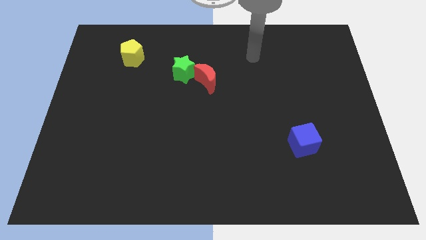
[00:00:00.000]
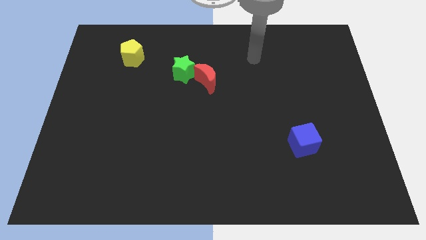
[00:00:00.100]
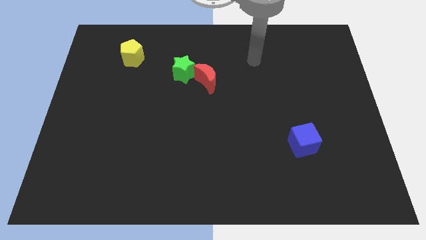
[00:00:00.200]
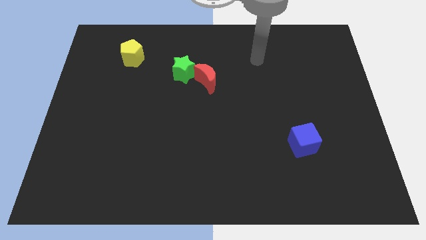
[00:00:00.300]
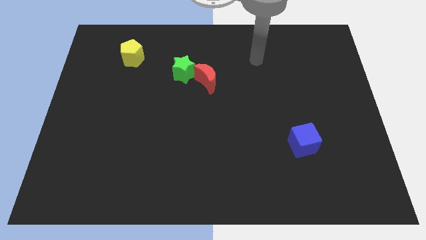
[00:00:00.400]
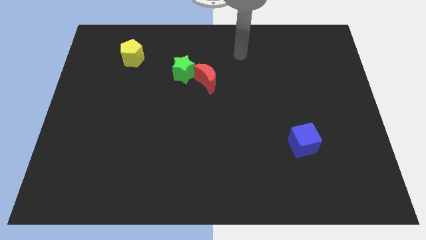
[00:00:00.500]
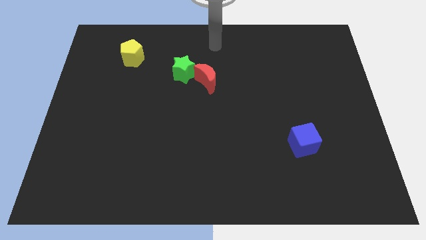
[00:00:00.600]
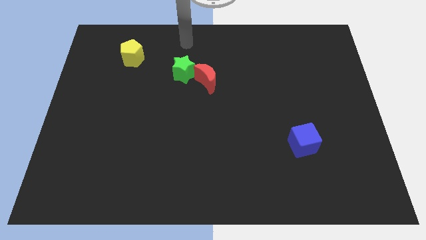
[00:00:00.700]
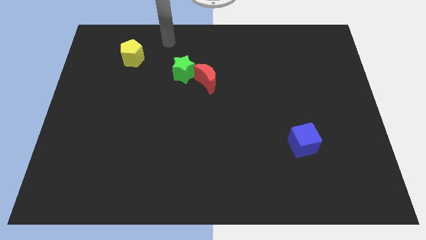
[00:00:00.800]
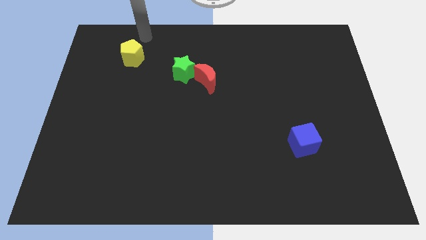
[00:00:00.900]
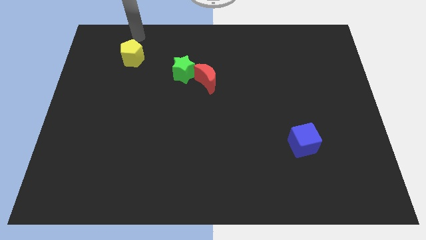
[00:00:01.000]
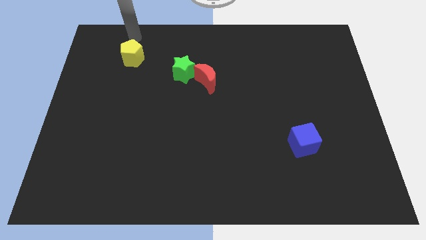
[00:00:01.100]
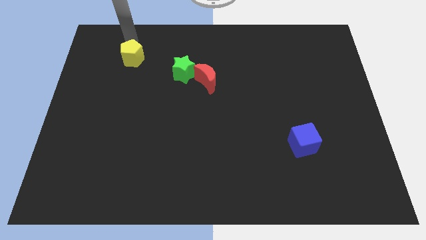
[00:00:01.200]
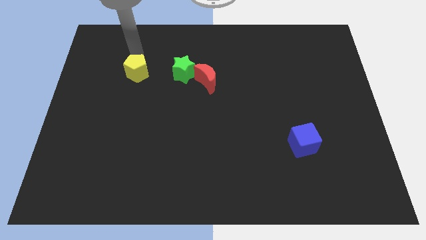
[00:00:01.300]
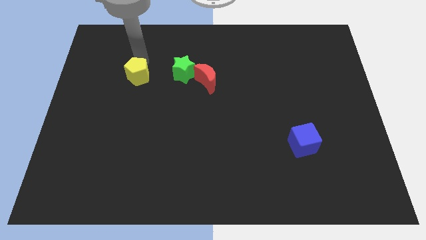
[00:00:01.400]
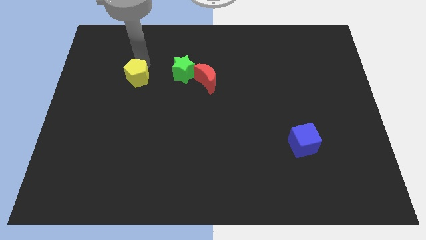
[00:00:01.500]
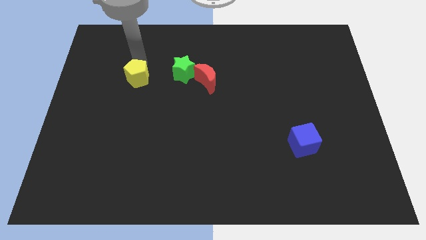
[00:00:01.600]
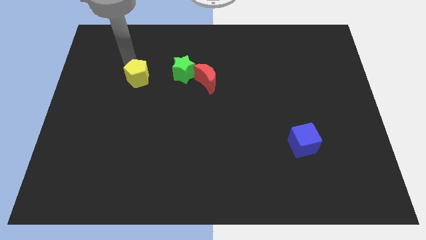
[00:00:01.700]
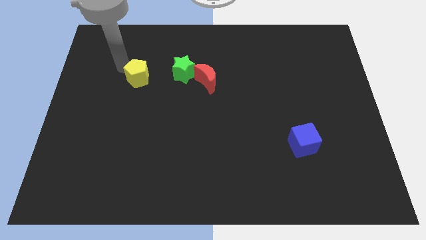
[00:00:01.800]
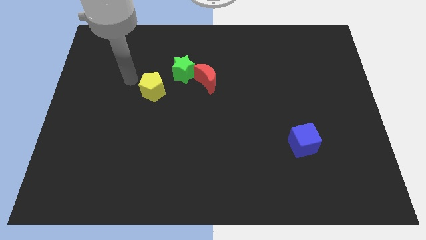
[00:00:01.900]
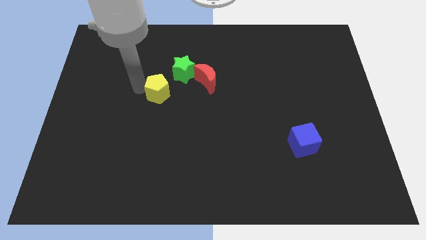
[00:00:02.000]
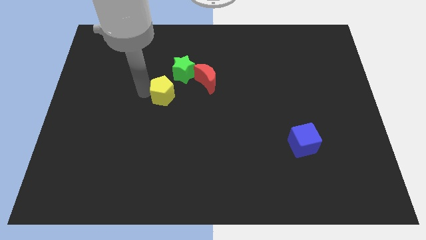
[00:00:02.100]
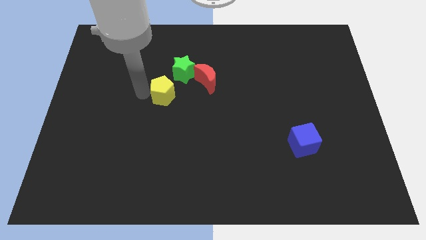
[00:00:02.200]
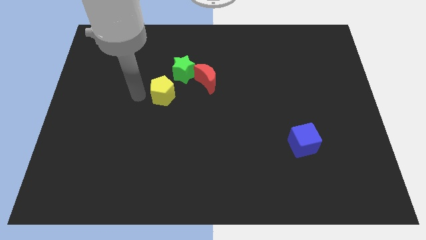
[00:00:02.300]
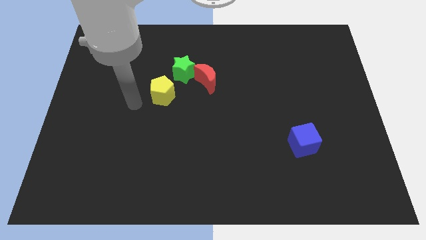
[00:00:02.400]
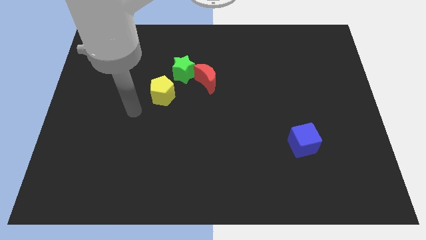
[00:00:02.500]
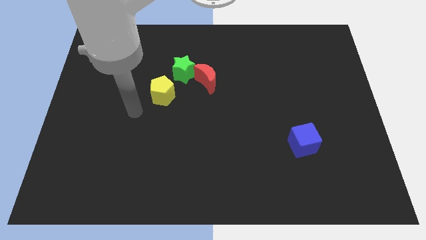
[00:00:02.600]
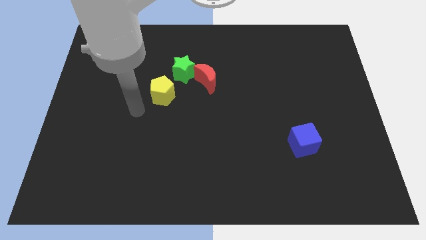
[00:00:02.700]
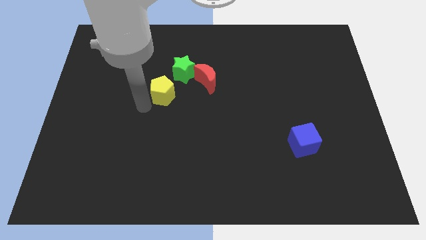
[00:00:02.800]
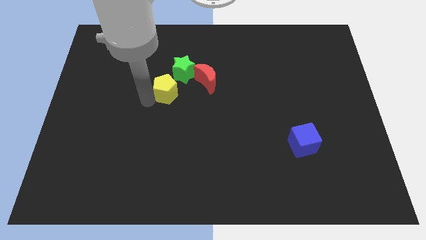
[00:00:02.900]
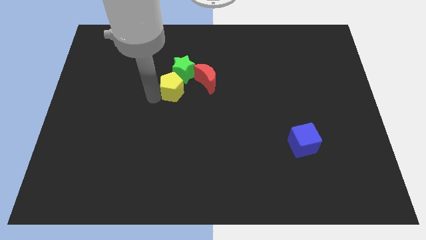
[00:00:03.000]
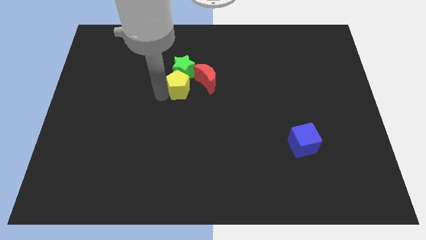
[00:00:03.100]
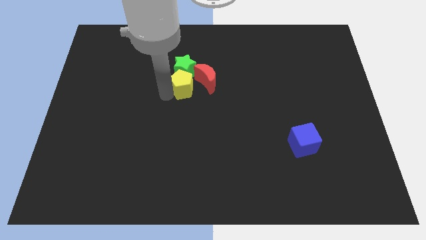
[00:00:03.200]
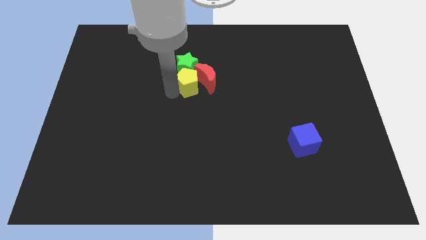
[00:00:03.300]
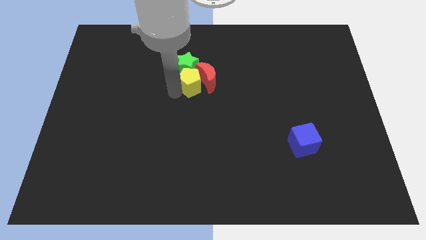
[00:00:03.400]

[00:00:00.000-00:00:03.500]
slide the pentagon next to the red block

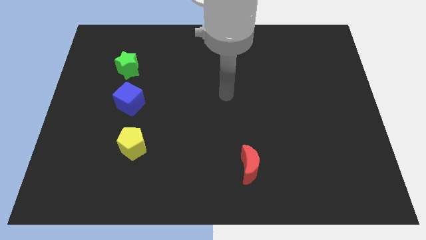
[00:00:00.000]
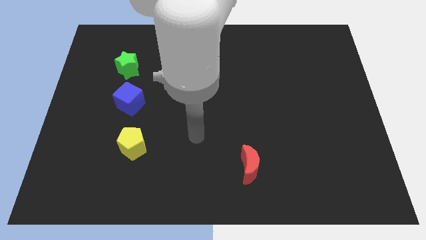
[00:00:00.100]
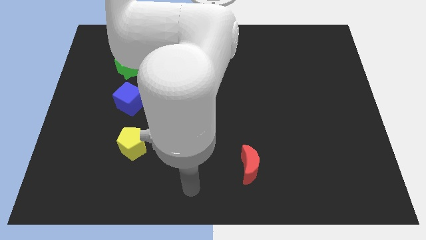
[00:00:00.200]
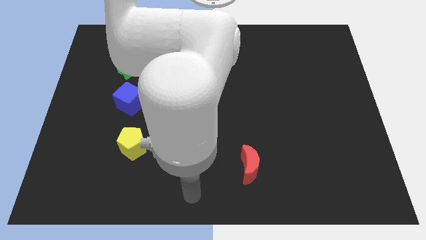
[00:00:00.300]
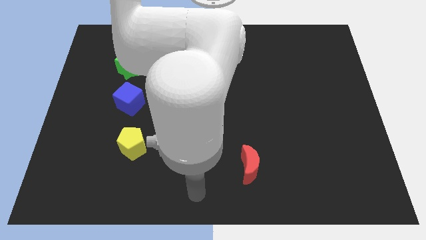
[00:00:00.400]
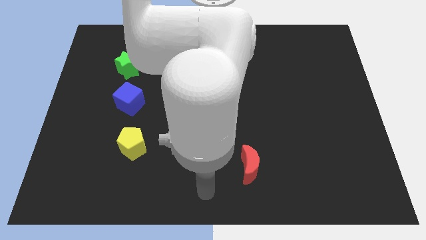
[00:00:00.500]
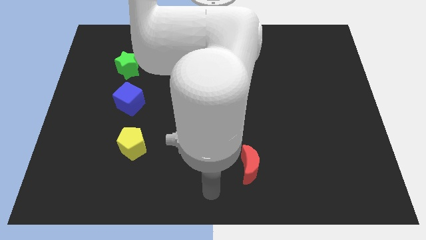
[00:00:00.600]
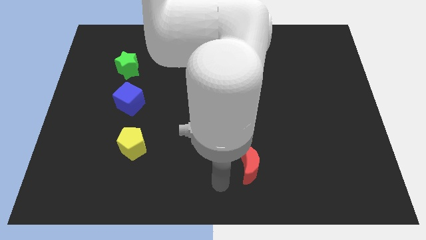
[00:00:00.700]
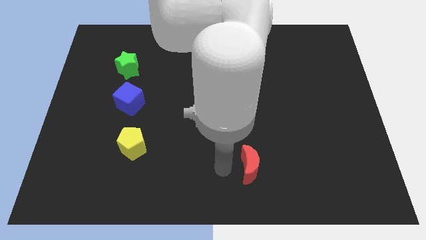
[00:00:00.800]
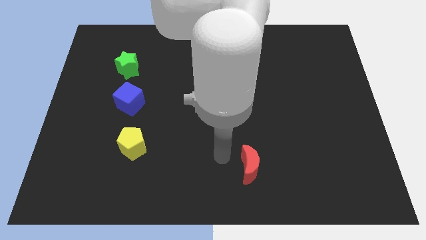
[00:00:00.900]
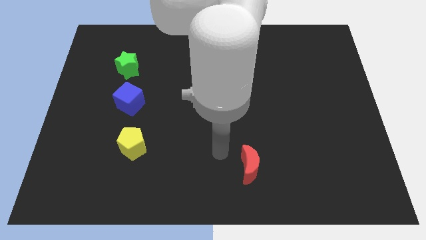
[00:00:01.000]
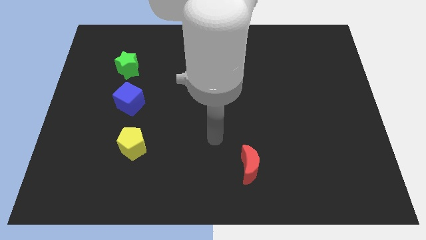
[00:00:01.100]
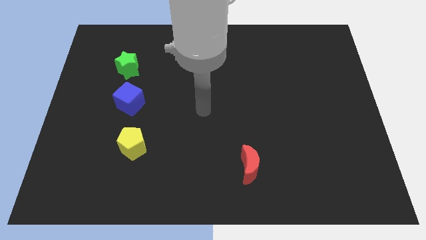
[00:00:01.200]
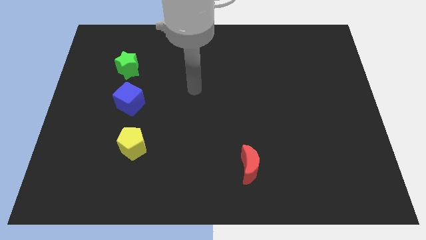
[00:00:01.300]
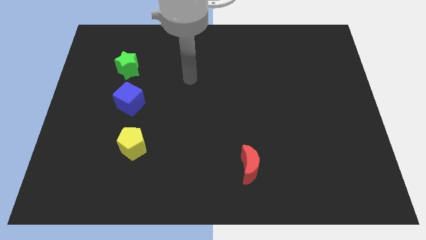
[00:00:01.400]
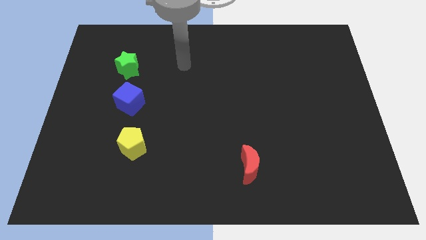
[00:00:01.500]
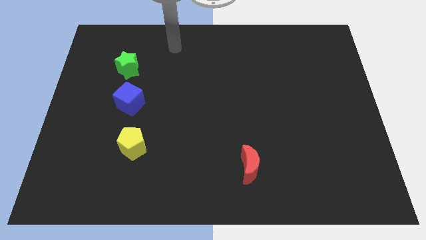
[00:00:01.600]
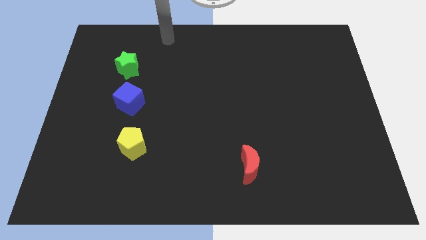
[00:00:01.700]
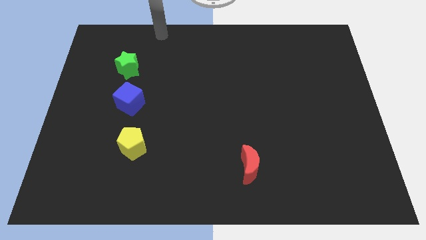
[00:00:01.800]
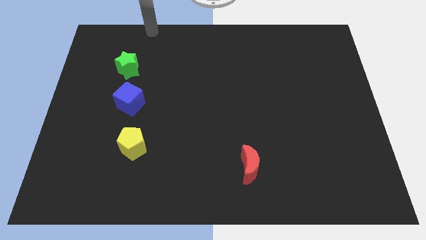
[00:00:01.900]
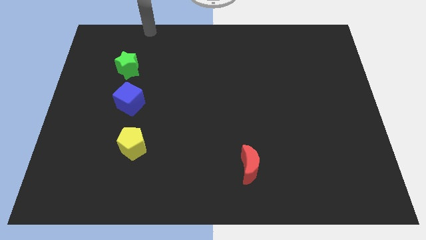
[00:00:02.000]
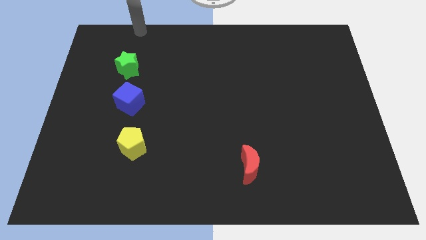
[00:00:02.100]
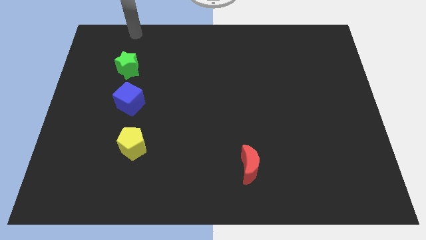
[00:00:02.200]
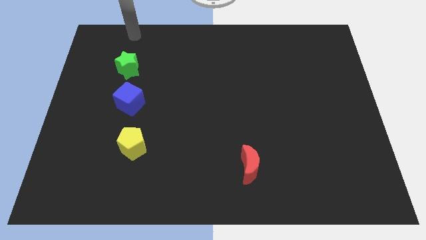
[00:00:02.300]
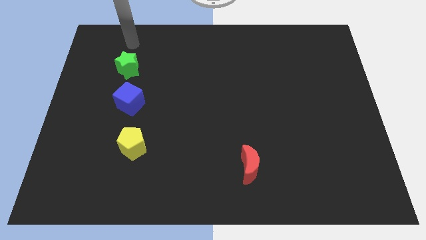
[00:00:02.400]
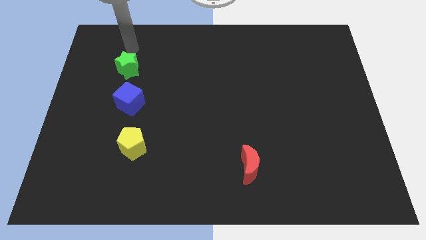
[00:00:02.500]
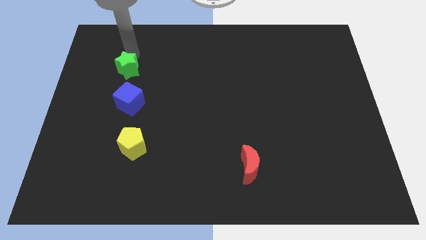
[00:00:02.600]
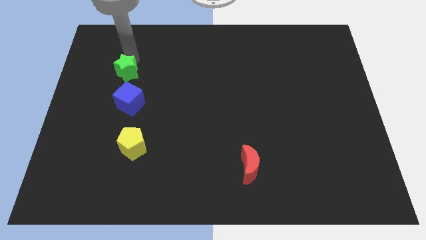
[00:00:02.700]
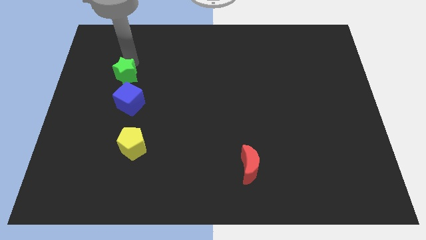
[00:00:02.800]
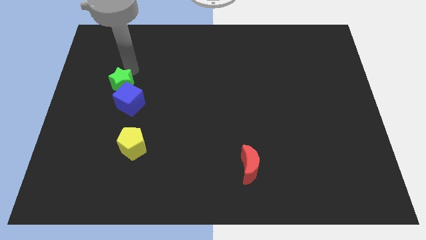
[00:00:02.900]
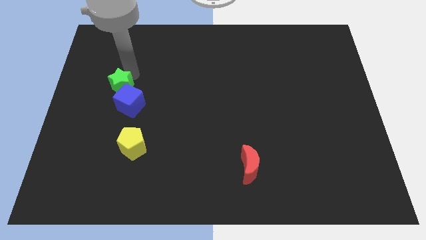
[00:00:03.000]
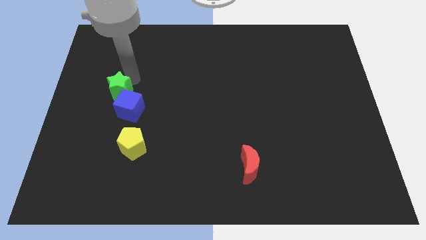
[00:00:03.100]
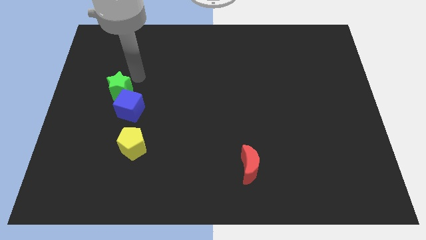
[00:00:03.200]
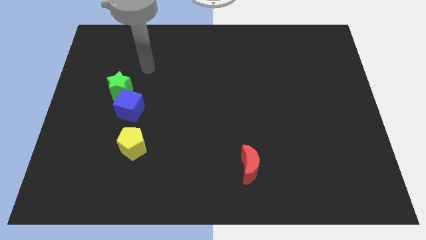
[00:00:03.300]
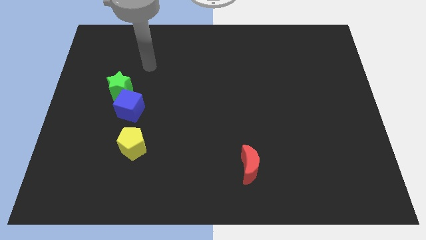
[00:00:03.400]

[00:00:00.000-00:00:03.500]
push the star next to the blue cube

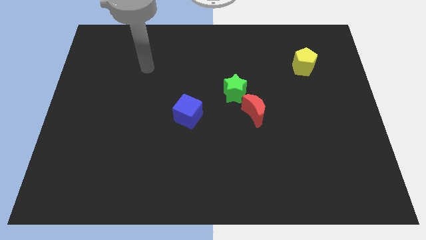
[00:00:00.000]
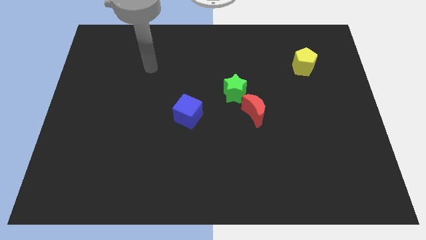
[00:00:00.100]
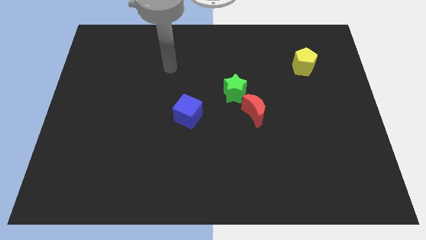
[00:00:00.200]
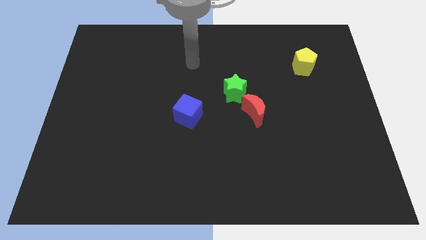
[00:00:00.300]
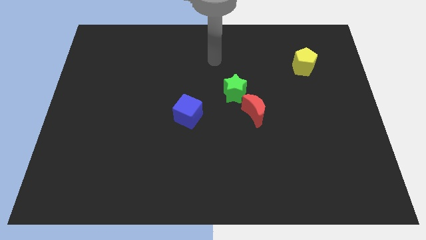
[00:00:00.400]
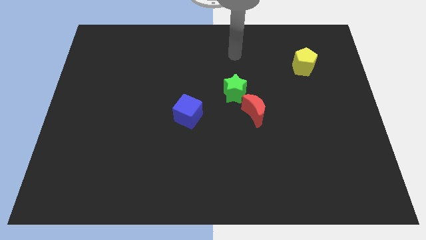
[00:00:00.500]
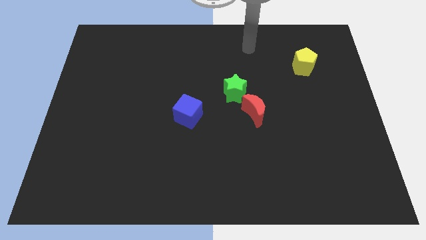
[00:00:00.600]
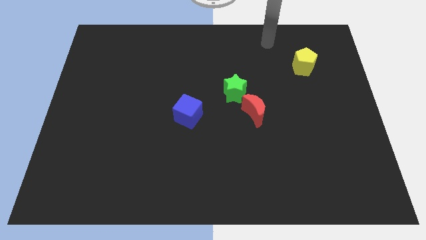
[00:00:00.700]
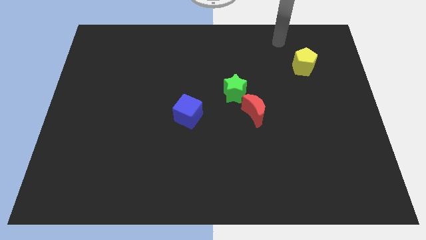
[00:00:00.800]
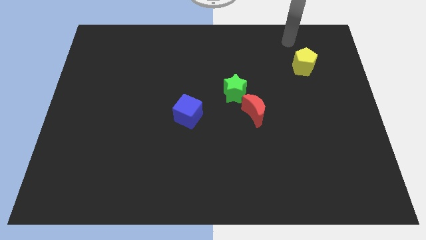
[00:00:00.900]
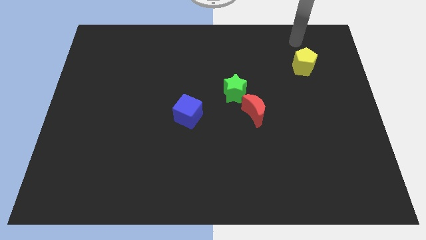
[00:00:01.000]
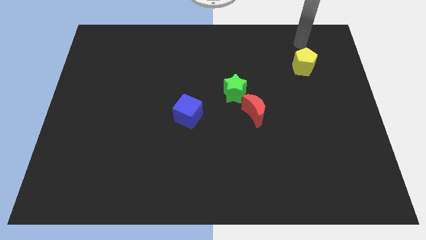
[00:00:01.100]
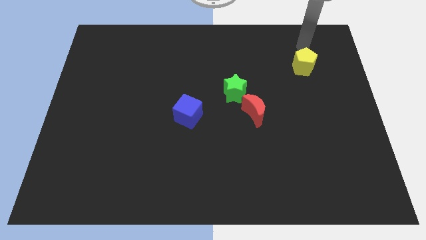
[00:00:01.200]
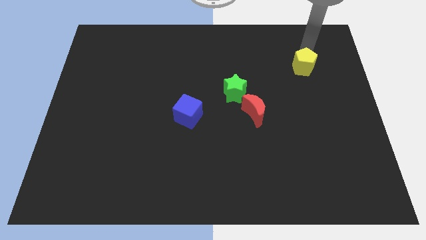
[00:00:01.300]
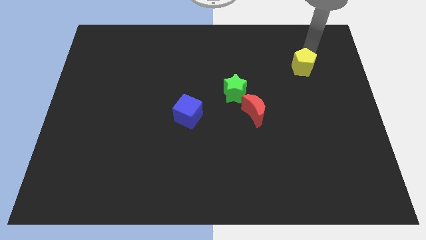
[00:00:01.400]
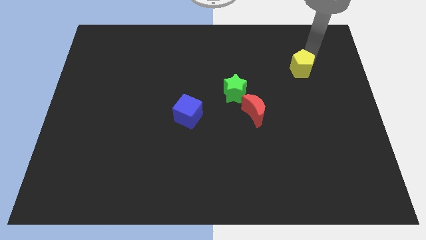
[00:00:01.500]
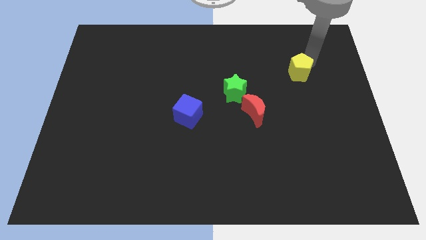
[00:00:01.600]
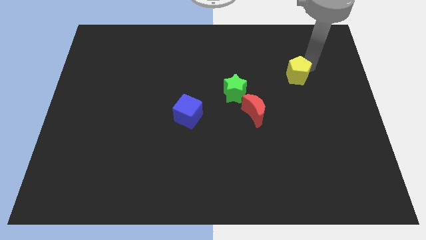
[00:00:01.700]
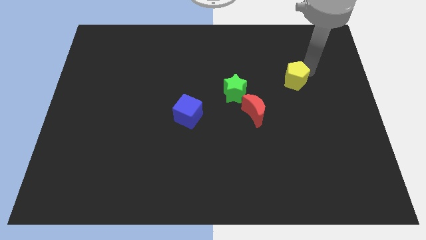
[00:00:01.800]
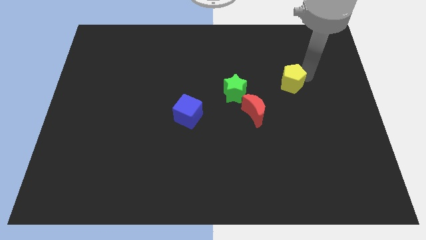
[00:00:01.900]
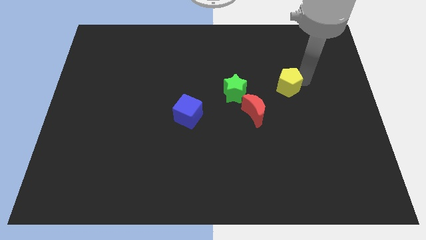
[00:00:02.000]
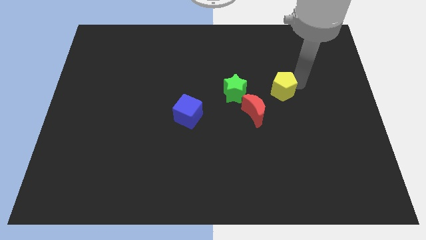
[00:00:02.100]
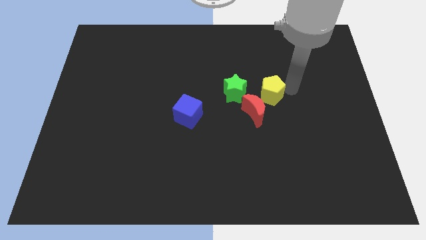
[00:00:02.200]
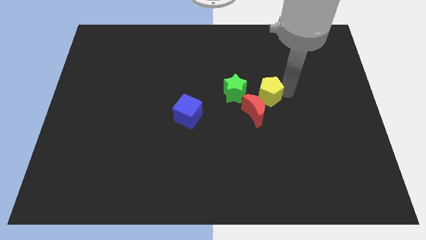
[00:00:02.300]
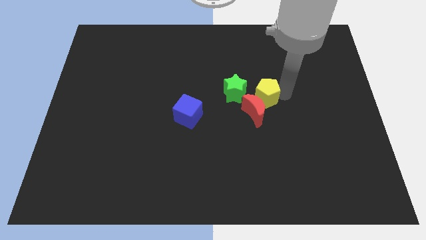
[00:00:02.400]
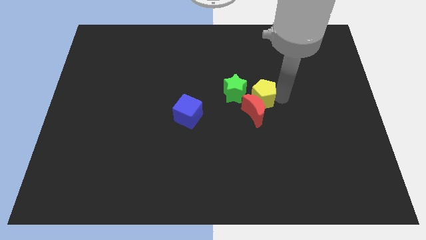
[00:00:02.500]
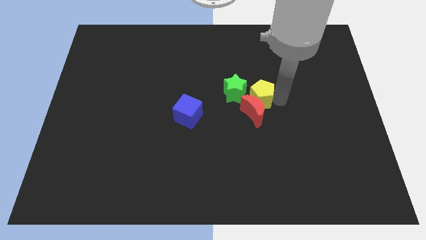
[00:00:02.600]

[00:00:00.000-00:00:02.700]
put the yellow pentagon towards the red block
